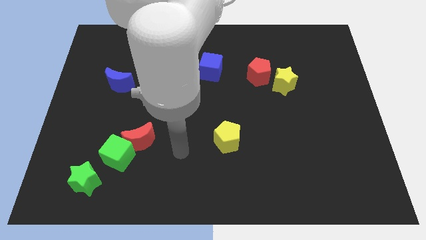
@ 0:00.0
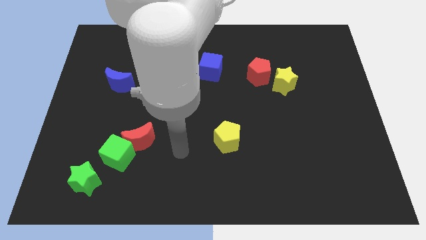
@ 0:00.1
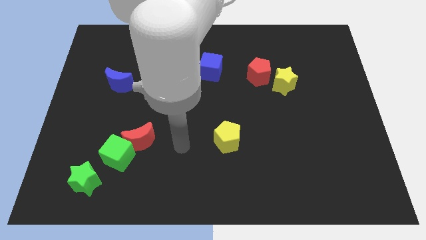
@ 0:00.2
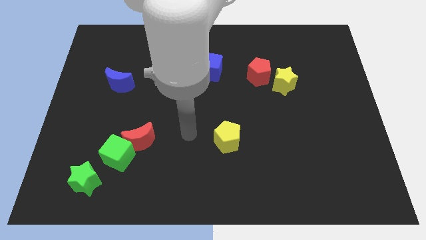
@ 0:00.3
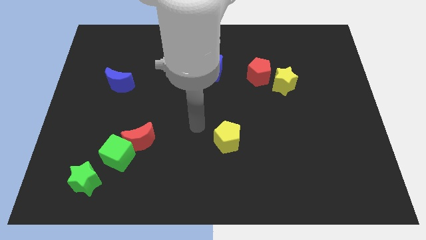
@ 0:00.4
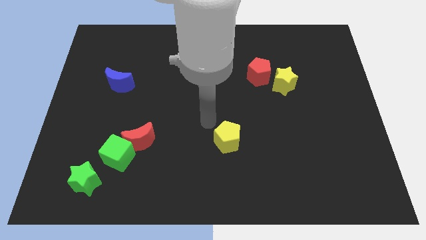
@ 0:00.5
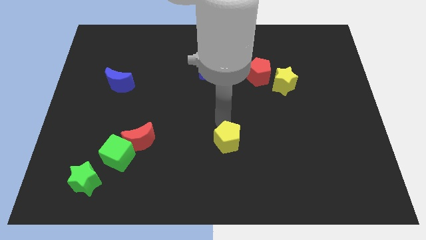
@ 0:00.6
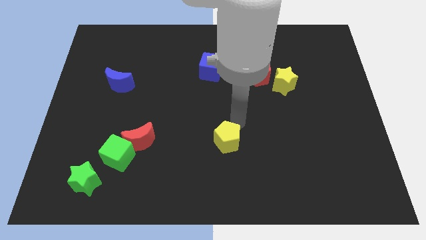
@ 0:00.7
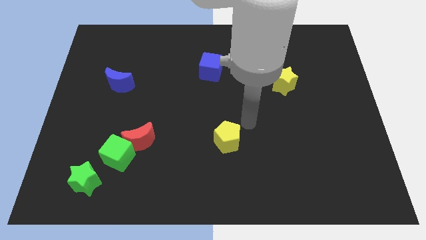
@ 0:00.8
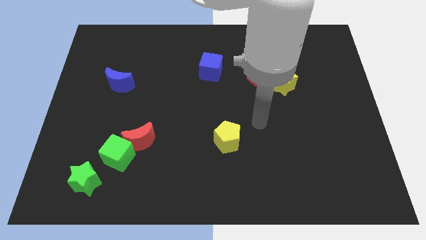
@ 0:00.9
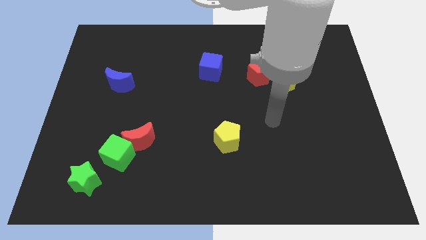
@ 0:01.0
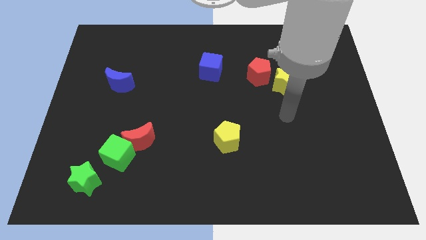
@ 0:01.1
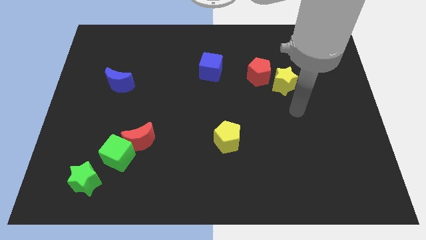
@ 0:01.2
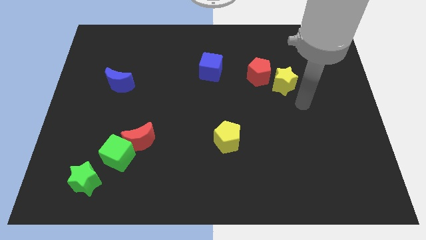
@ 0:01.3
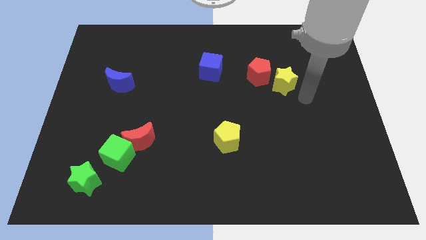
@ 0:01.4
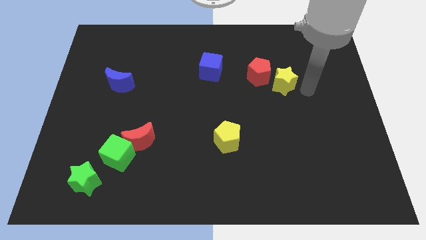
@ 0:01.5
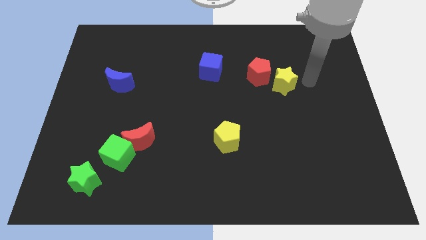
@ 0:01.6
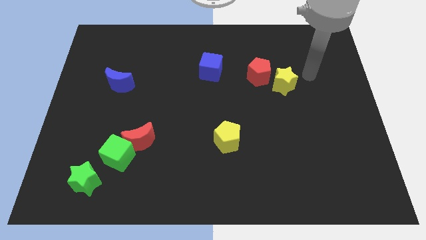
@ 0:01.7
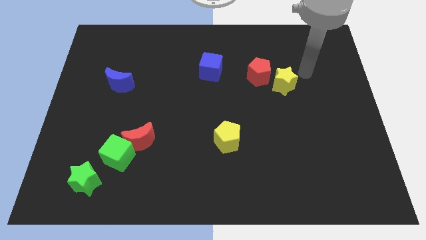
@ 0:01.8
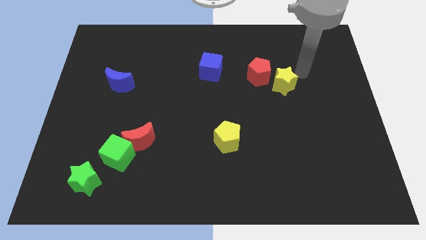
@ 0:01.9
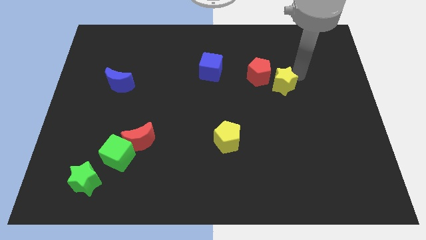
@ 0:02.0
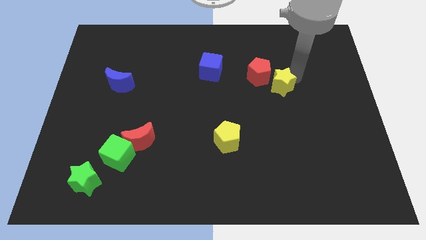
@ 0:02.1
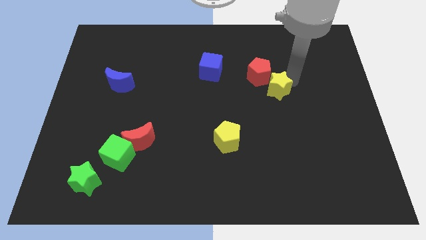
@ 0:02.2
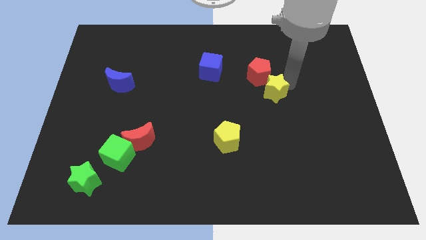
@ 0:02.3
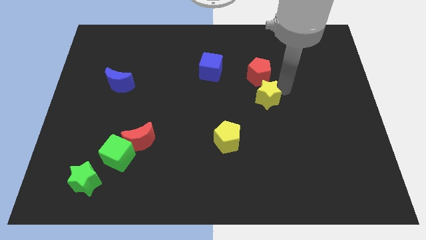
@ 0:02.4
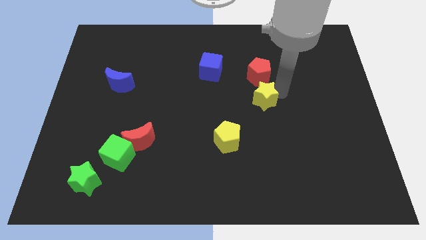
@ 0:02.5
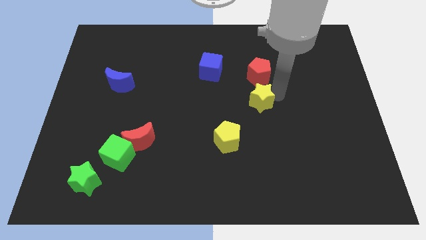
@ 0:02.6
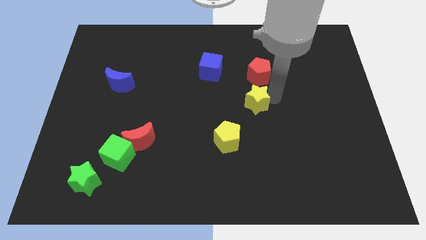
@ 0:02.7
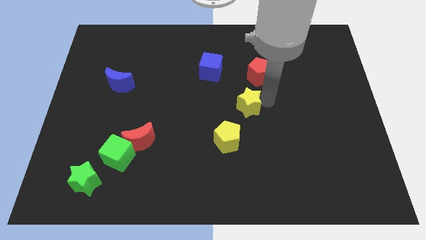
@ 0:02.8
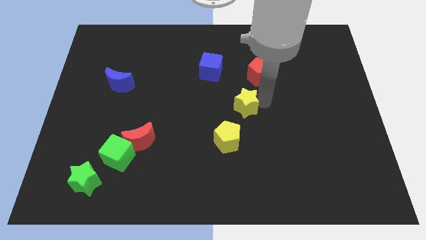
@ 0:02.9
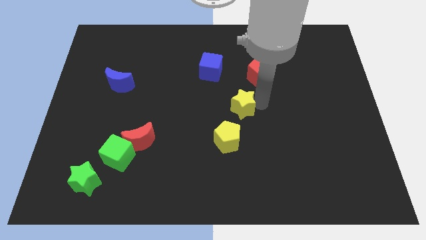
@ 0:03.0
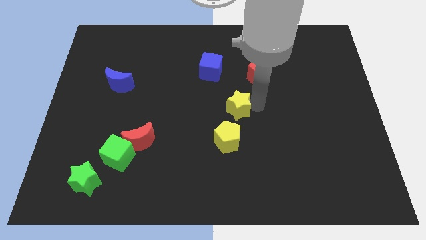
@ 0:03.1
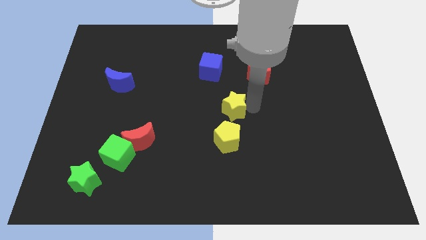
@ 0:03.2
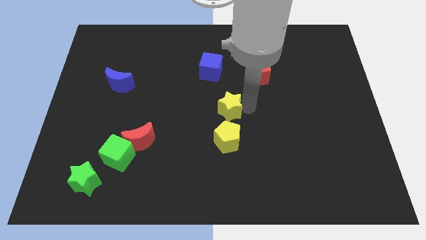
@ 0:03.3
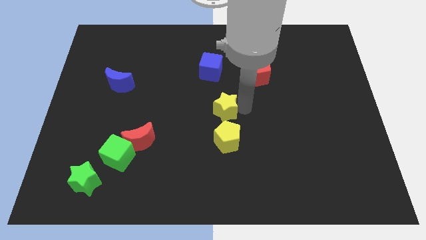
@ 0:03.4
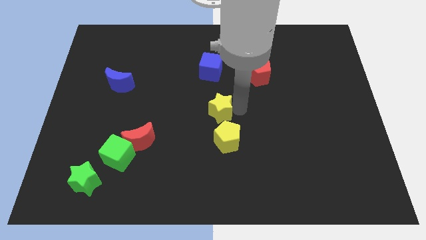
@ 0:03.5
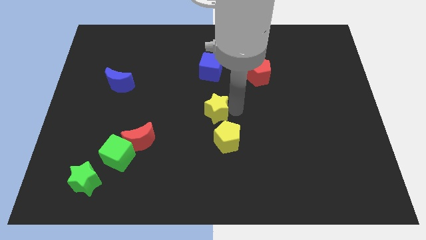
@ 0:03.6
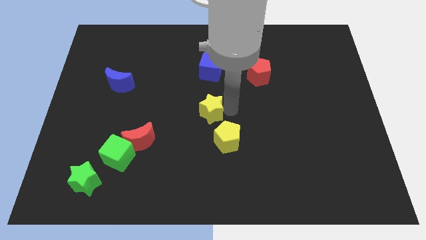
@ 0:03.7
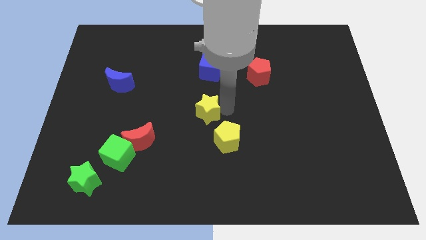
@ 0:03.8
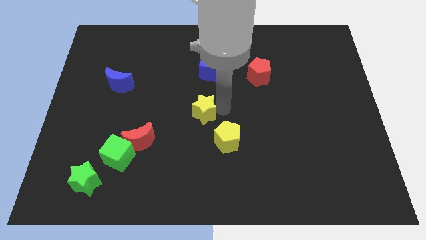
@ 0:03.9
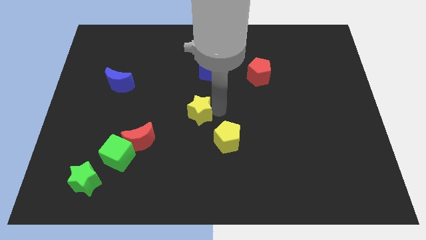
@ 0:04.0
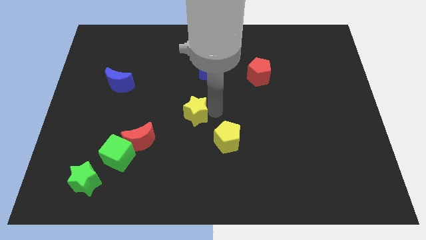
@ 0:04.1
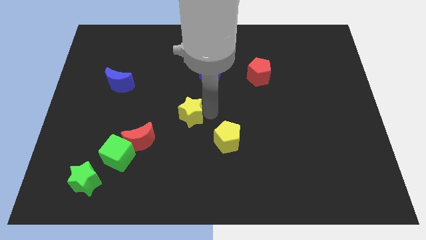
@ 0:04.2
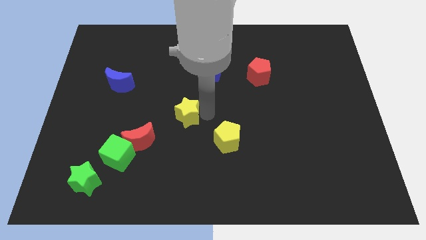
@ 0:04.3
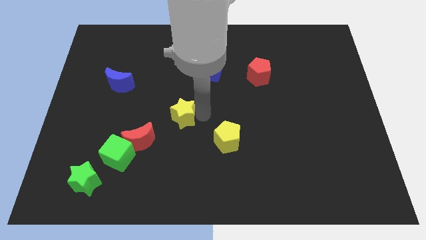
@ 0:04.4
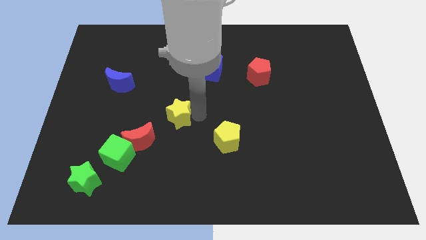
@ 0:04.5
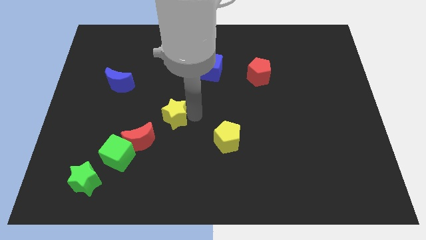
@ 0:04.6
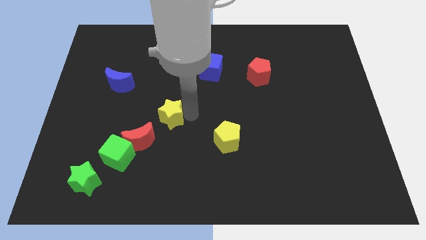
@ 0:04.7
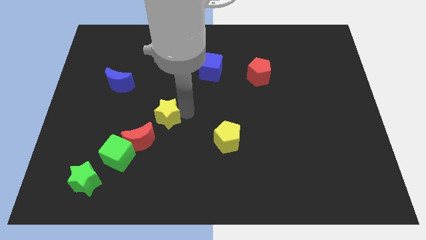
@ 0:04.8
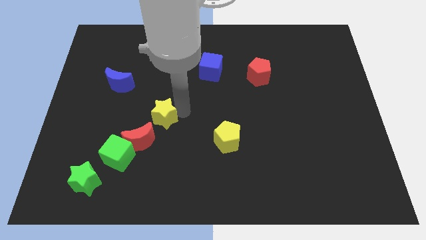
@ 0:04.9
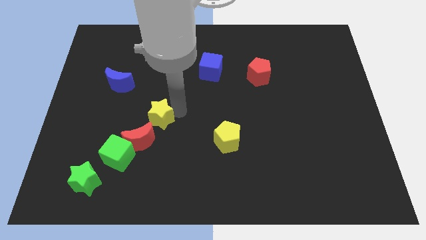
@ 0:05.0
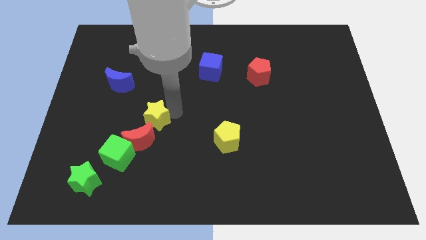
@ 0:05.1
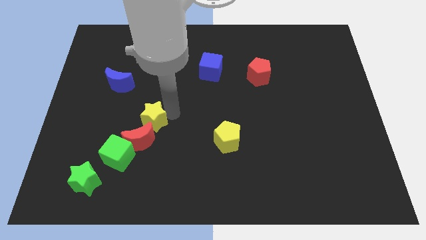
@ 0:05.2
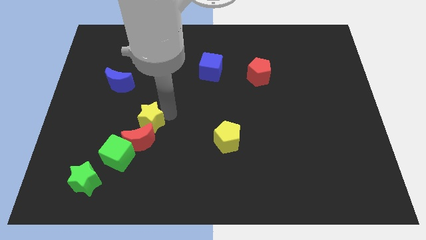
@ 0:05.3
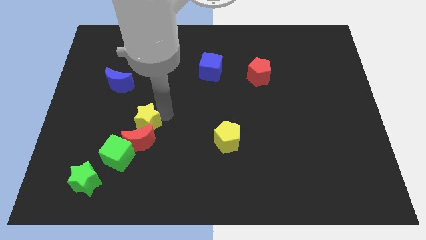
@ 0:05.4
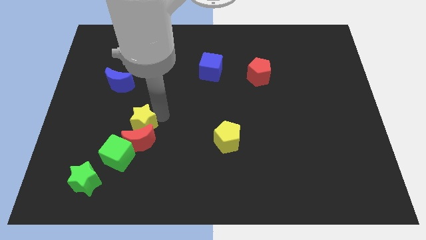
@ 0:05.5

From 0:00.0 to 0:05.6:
put the yellow star towards the red moon

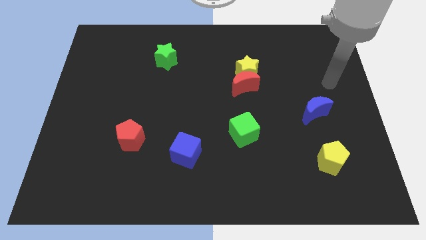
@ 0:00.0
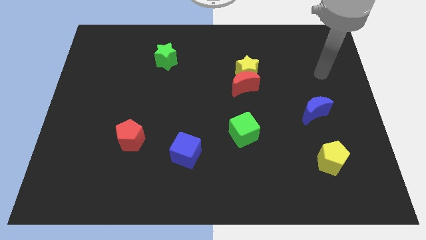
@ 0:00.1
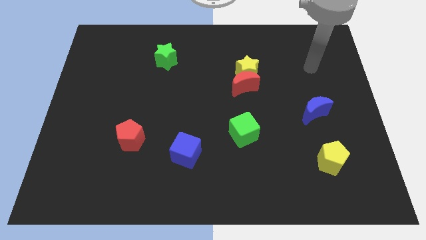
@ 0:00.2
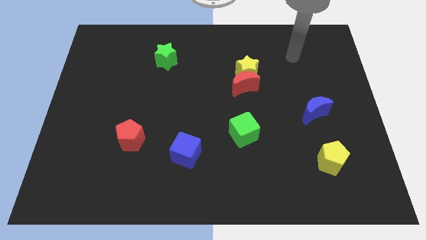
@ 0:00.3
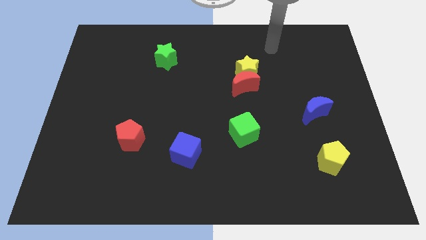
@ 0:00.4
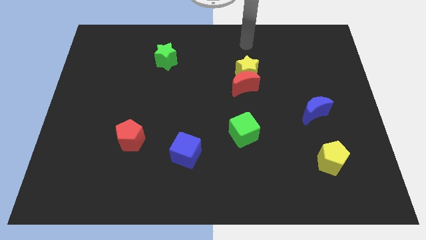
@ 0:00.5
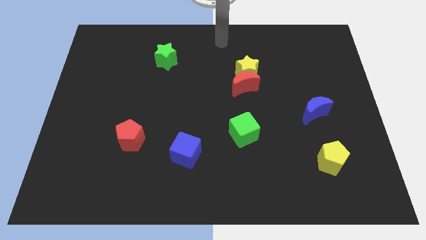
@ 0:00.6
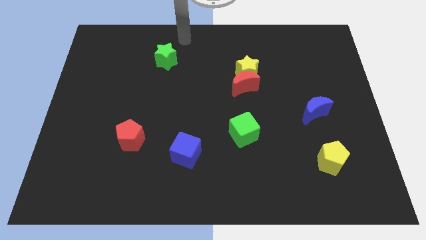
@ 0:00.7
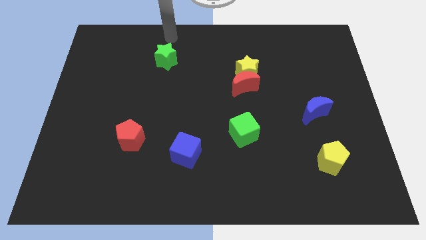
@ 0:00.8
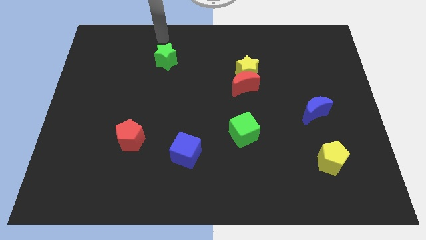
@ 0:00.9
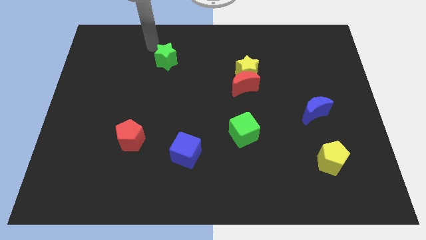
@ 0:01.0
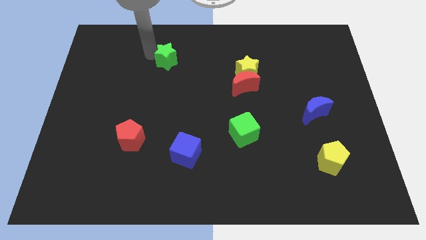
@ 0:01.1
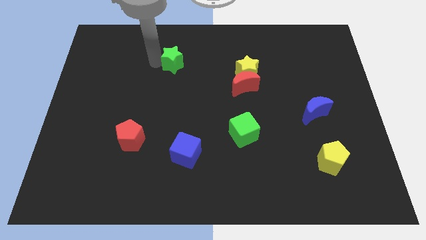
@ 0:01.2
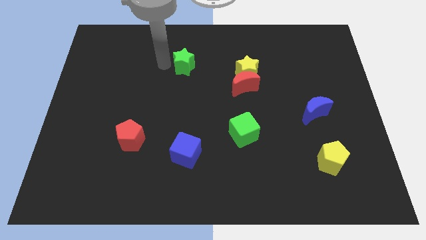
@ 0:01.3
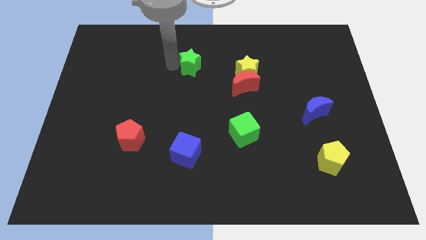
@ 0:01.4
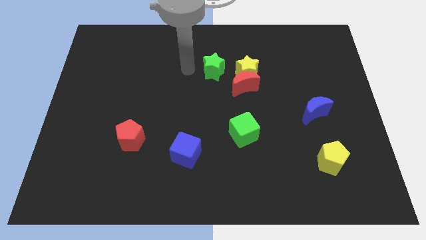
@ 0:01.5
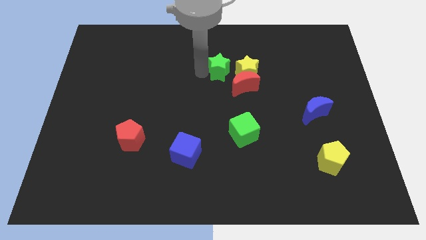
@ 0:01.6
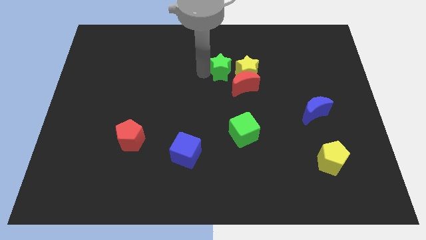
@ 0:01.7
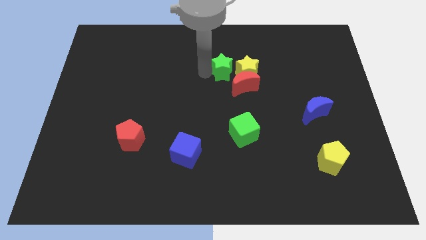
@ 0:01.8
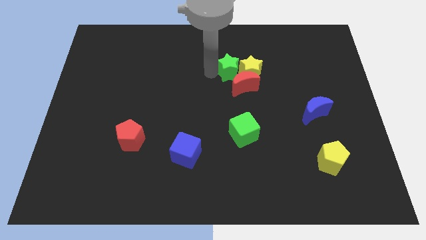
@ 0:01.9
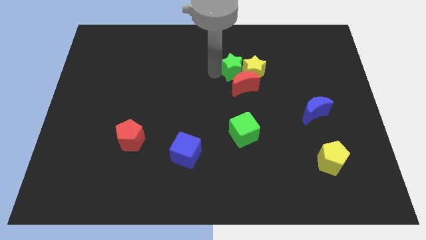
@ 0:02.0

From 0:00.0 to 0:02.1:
move the green star to the yellow star

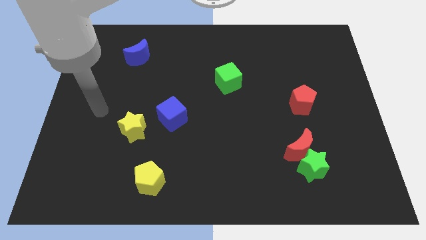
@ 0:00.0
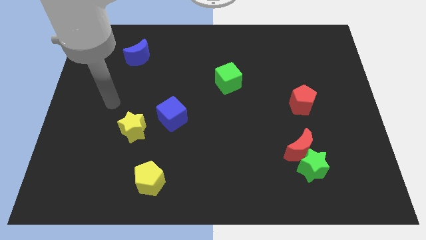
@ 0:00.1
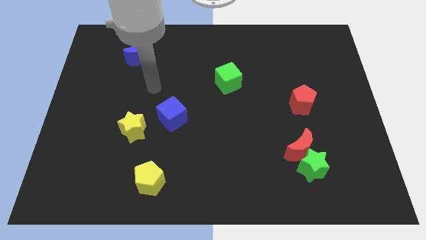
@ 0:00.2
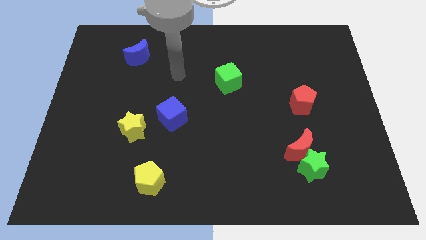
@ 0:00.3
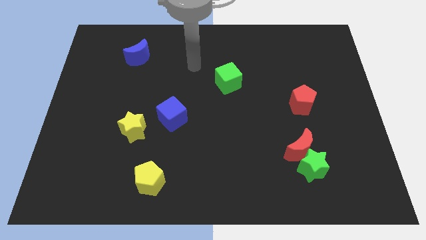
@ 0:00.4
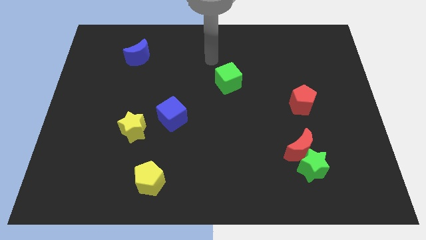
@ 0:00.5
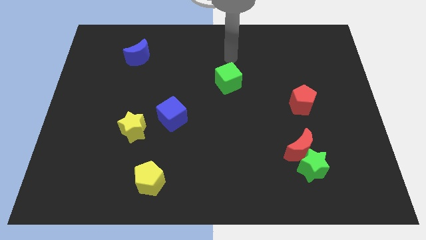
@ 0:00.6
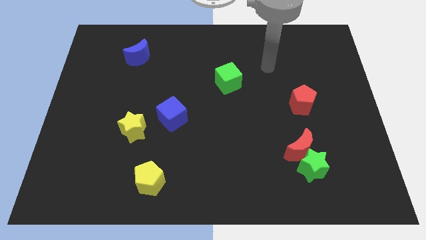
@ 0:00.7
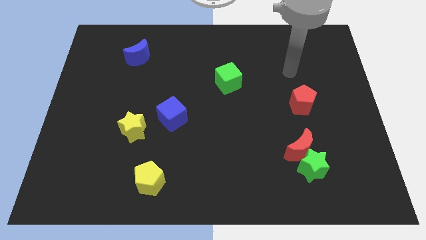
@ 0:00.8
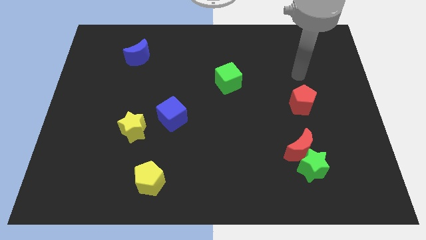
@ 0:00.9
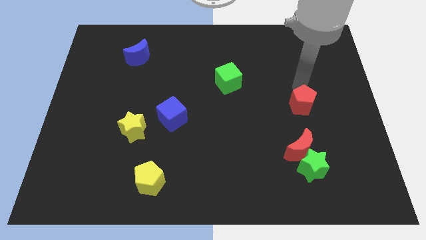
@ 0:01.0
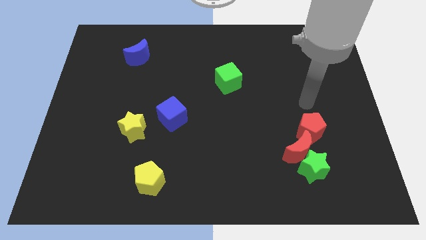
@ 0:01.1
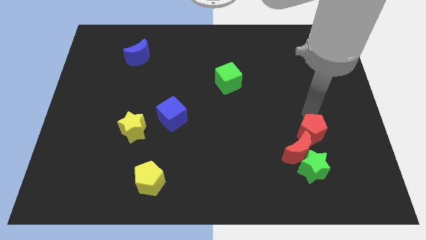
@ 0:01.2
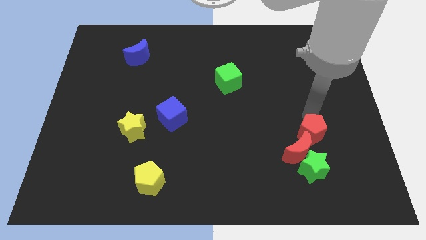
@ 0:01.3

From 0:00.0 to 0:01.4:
put the red pentagon to the red moon
